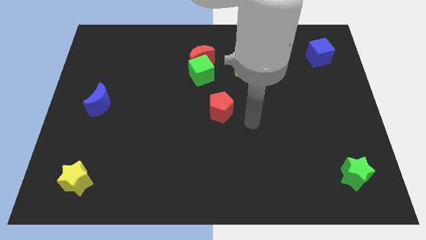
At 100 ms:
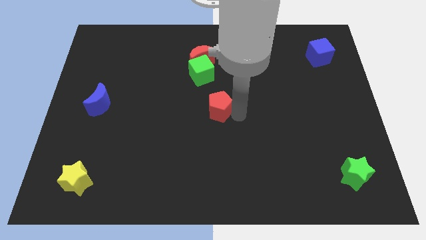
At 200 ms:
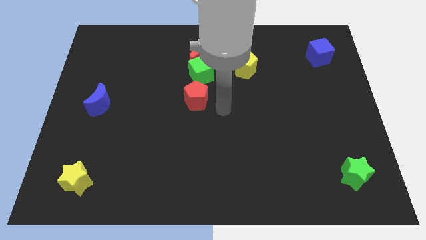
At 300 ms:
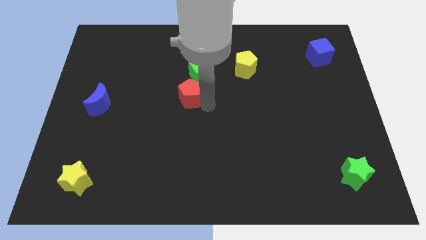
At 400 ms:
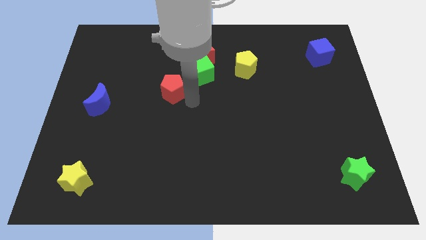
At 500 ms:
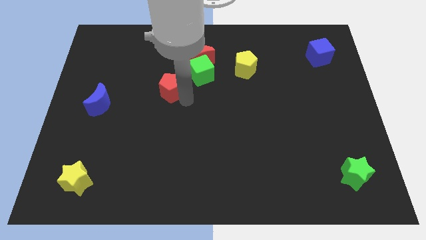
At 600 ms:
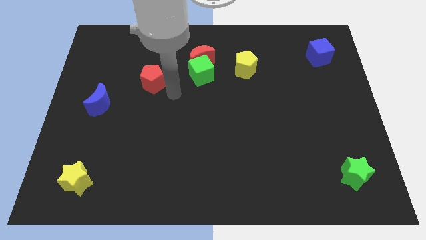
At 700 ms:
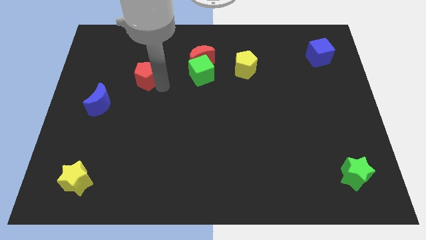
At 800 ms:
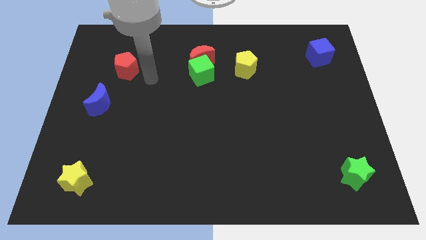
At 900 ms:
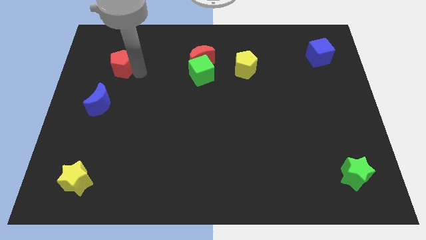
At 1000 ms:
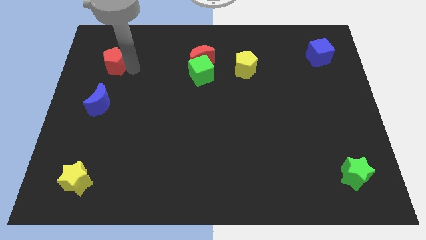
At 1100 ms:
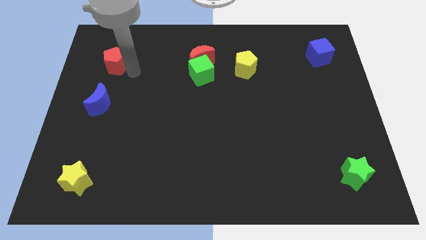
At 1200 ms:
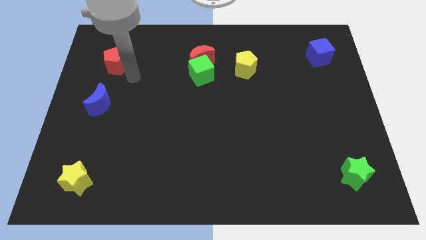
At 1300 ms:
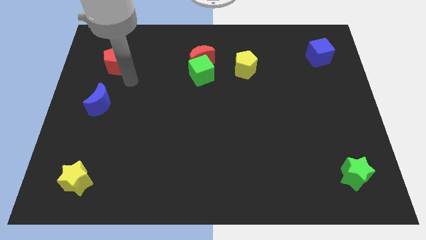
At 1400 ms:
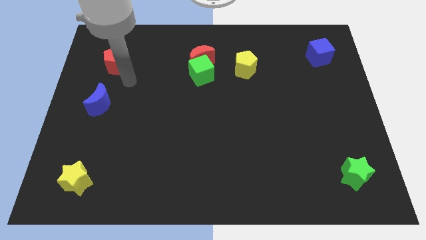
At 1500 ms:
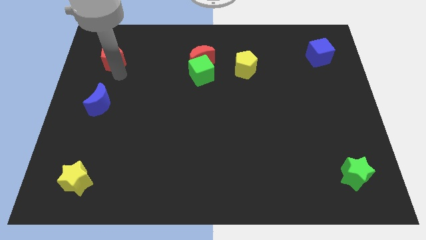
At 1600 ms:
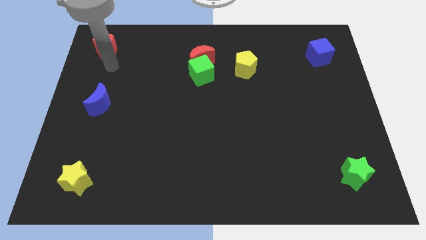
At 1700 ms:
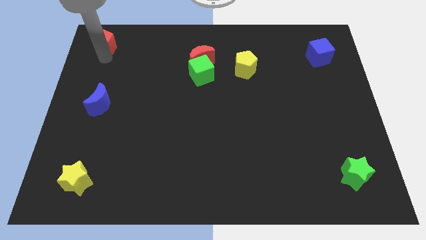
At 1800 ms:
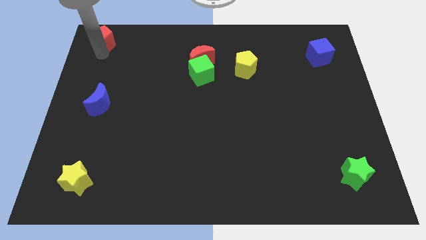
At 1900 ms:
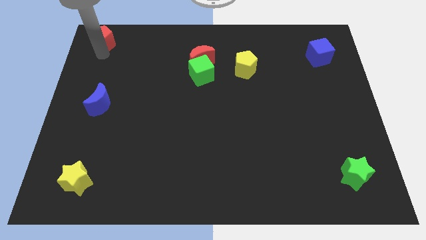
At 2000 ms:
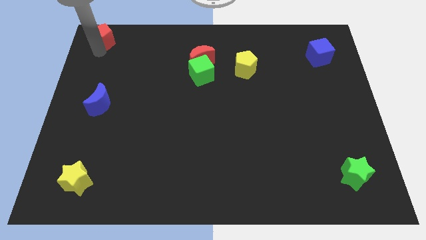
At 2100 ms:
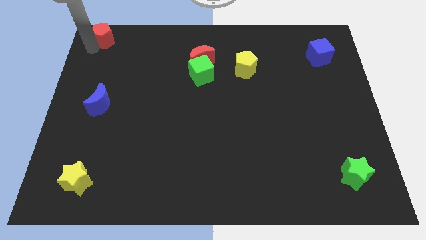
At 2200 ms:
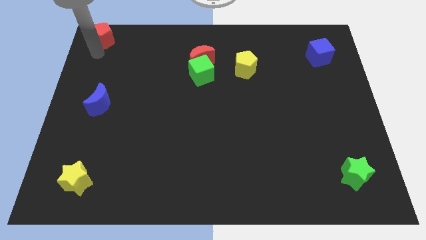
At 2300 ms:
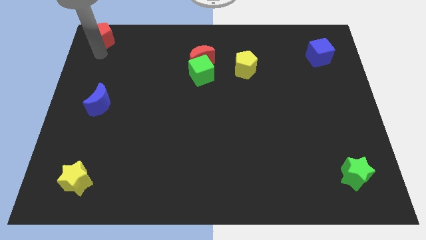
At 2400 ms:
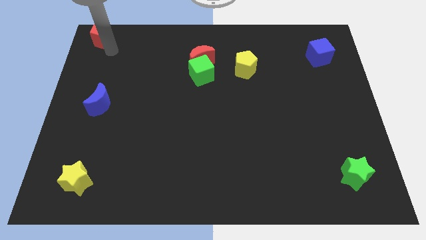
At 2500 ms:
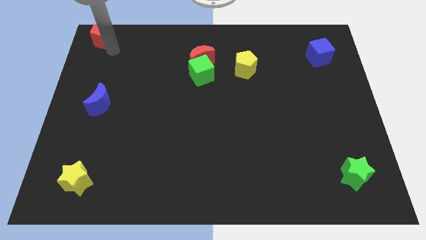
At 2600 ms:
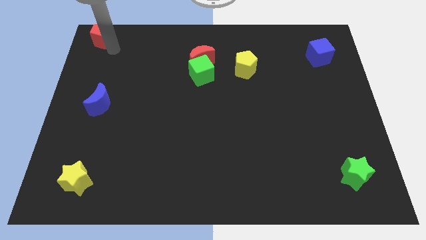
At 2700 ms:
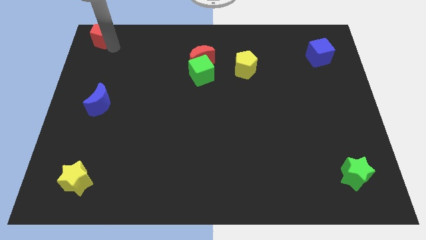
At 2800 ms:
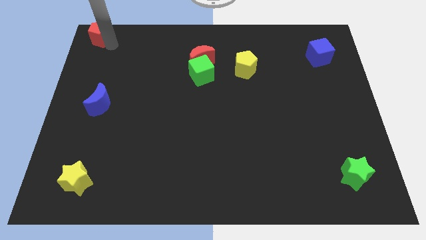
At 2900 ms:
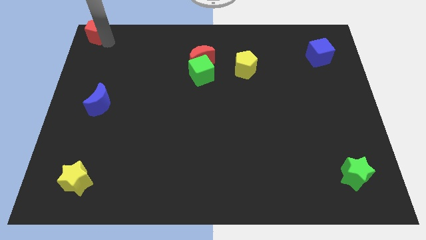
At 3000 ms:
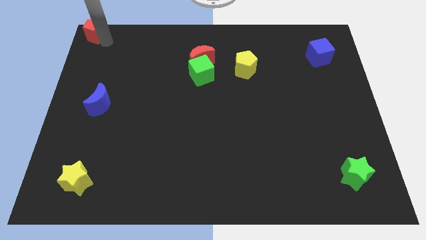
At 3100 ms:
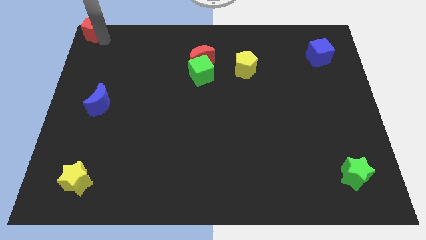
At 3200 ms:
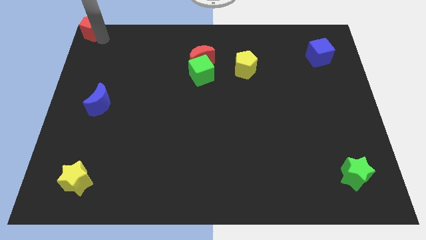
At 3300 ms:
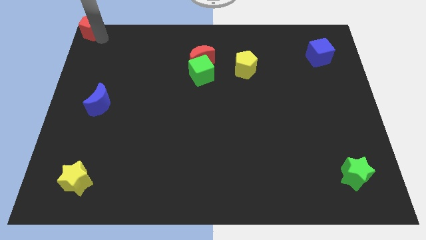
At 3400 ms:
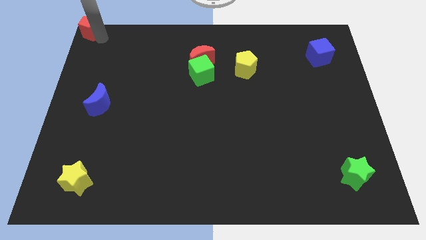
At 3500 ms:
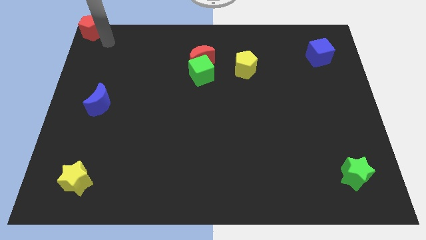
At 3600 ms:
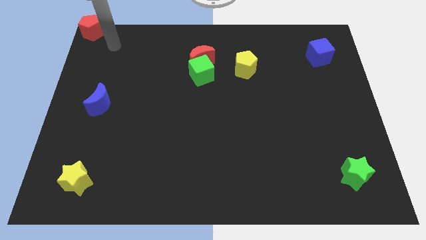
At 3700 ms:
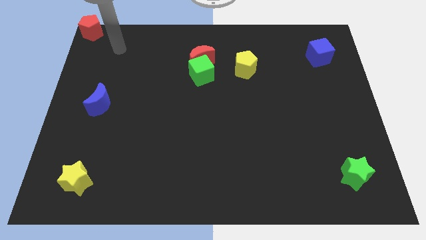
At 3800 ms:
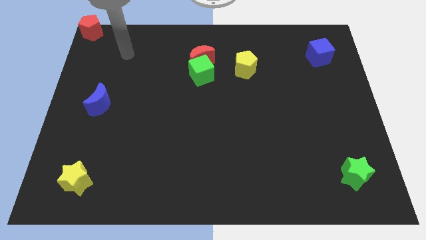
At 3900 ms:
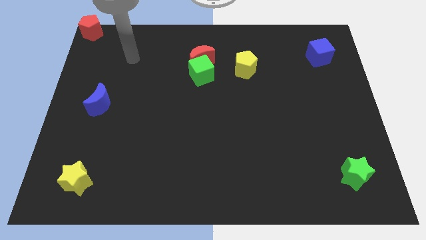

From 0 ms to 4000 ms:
push the red pentagon to the top left corner

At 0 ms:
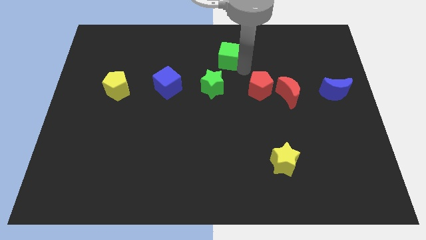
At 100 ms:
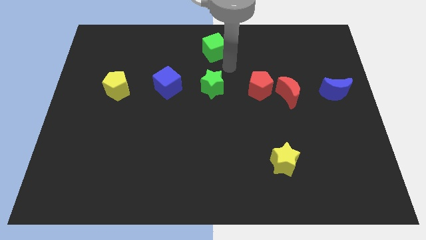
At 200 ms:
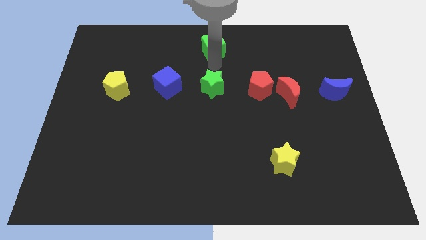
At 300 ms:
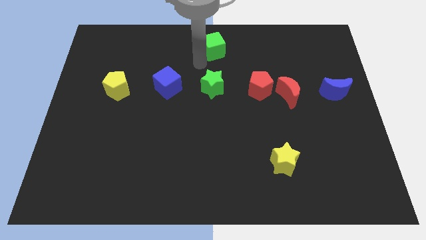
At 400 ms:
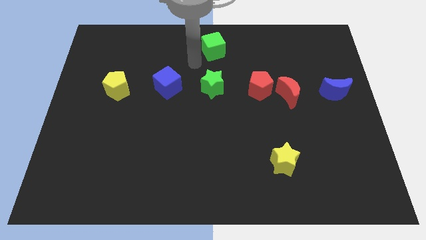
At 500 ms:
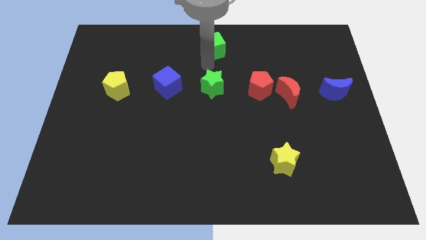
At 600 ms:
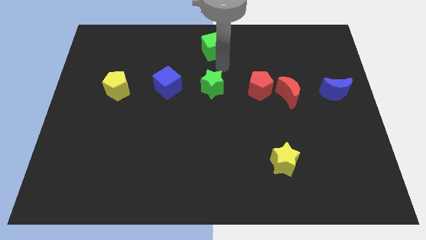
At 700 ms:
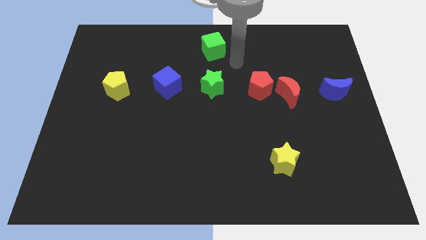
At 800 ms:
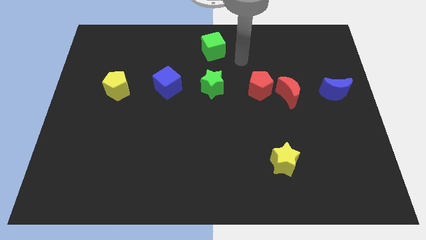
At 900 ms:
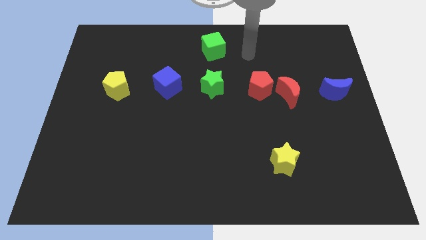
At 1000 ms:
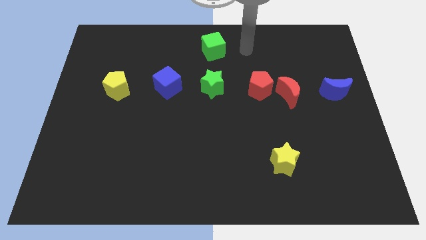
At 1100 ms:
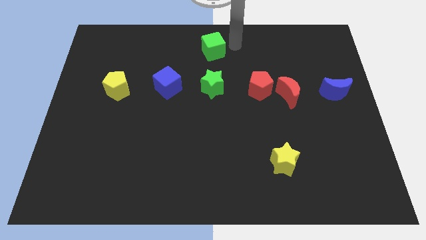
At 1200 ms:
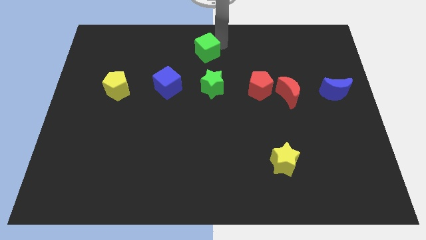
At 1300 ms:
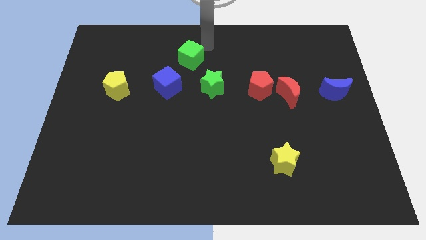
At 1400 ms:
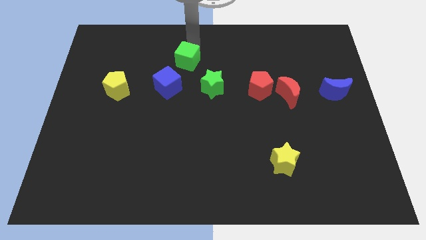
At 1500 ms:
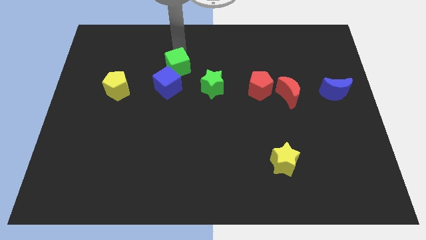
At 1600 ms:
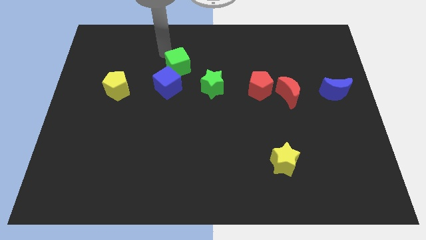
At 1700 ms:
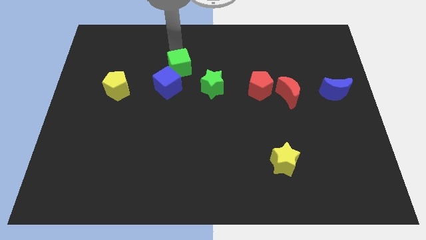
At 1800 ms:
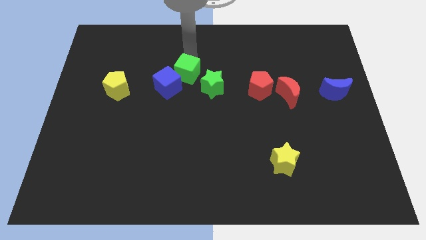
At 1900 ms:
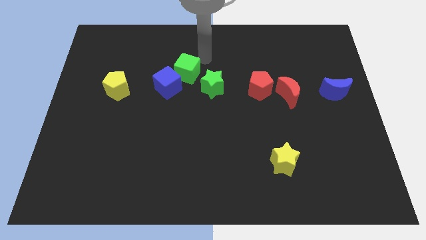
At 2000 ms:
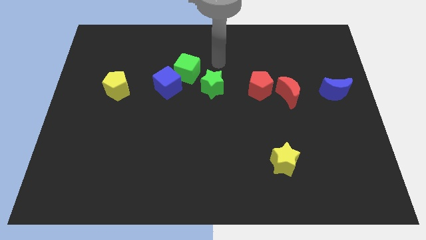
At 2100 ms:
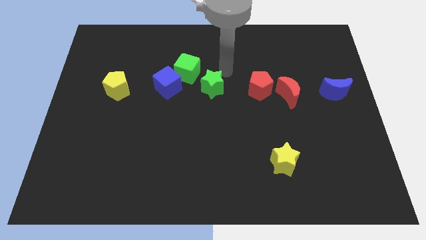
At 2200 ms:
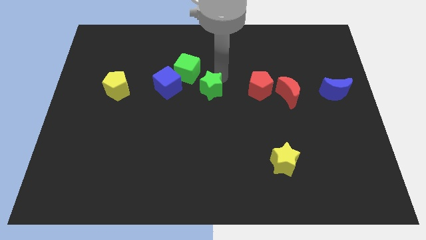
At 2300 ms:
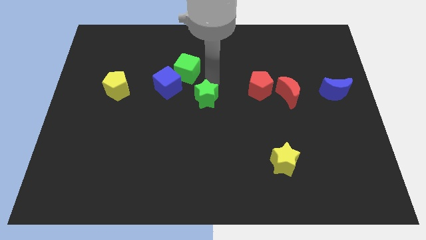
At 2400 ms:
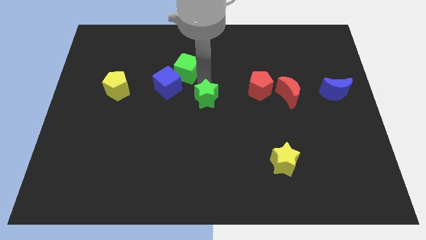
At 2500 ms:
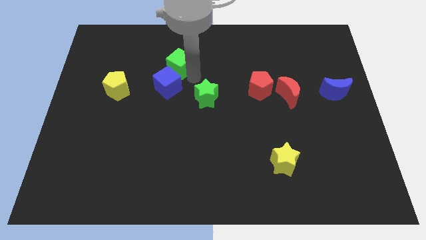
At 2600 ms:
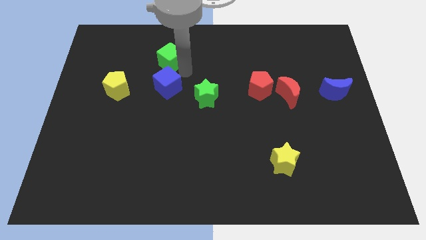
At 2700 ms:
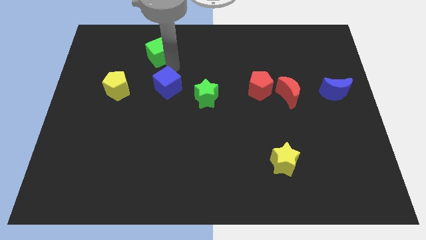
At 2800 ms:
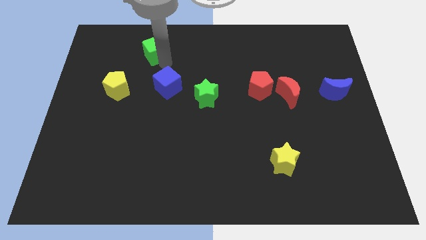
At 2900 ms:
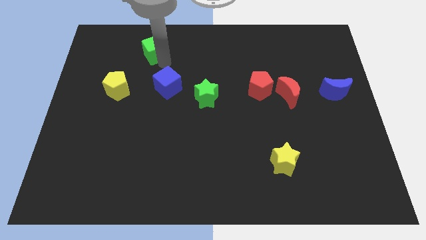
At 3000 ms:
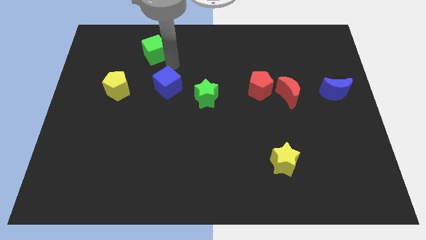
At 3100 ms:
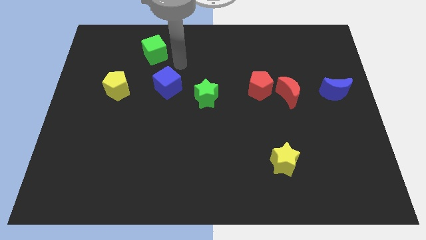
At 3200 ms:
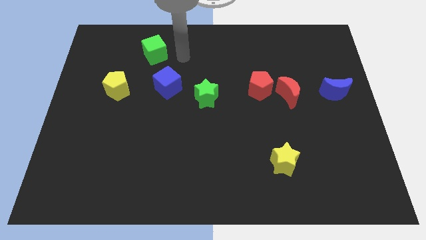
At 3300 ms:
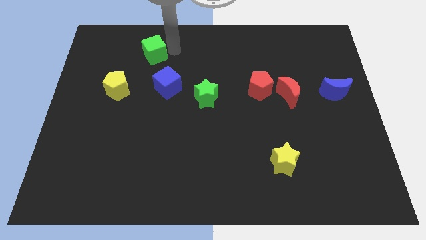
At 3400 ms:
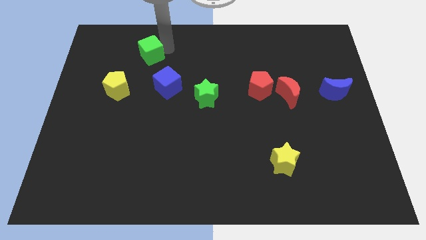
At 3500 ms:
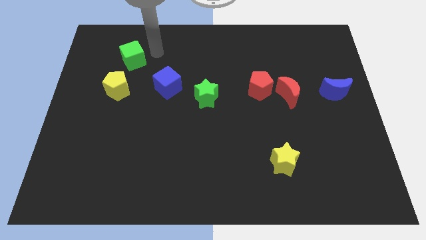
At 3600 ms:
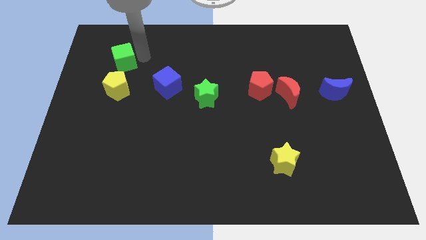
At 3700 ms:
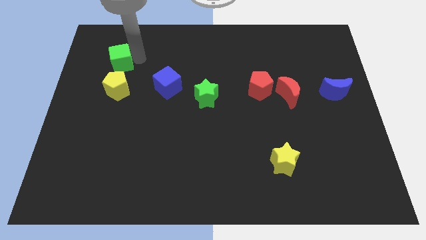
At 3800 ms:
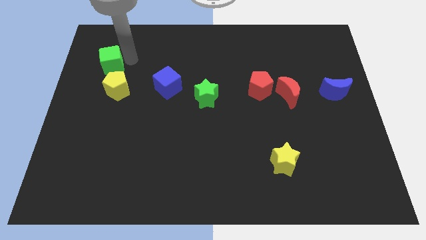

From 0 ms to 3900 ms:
place the green cube at the top of yellow pentagon

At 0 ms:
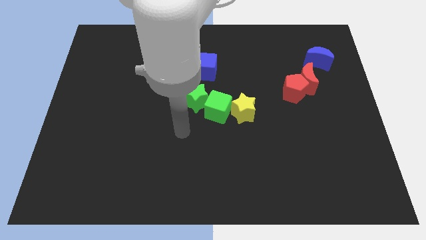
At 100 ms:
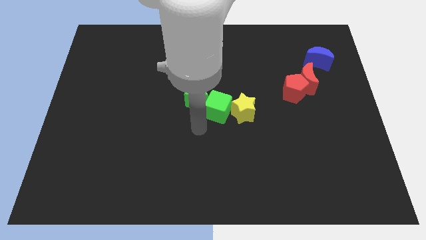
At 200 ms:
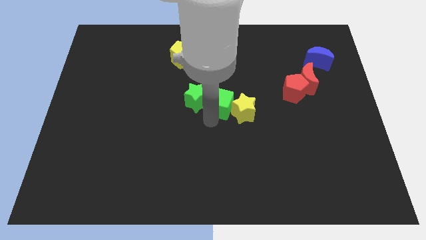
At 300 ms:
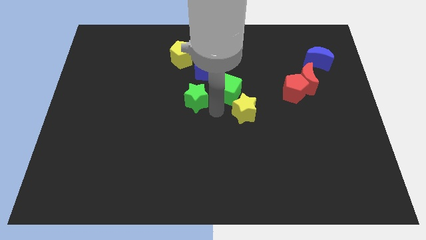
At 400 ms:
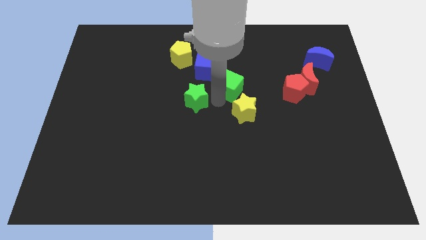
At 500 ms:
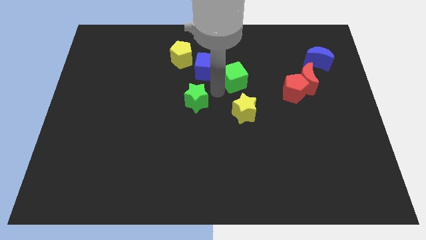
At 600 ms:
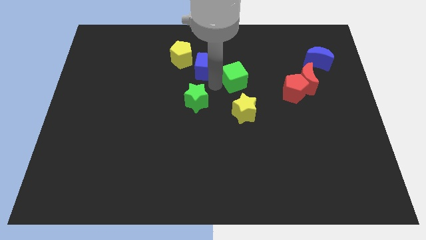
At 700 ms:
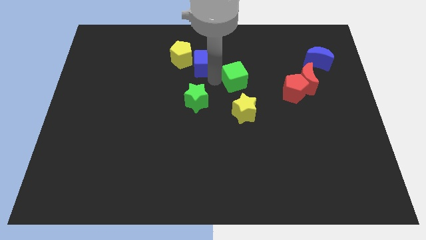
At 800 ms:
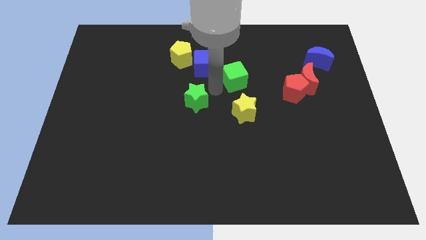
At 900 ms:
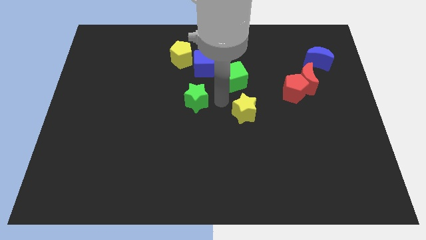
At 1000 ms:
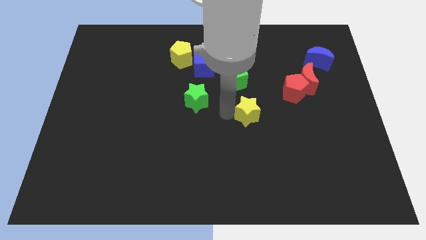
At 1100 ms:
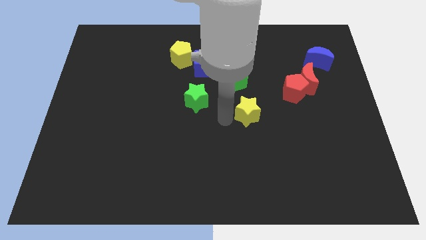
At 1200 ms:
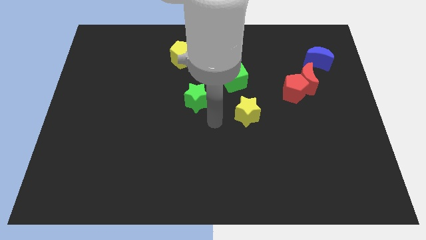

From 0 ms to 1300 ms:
separate the green cube from the yellow and green stars
